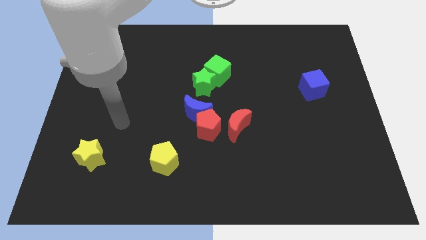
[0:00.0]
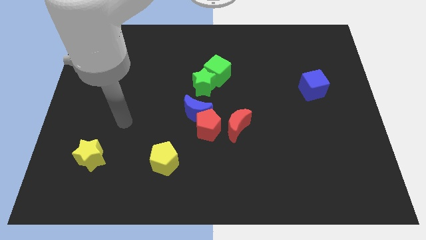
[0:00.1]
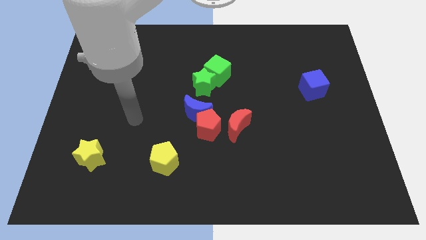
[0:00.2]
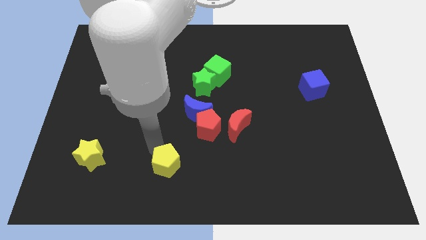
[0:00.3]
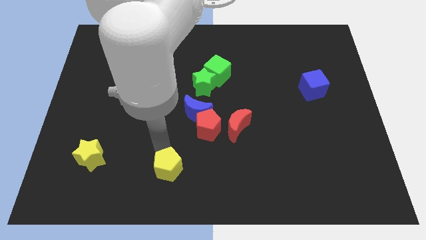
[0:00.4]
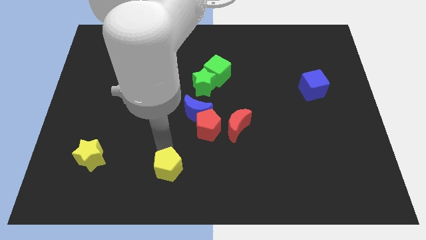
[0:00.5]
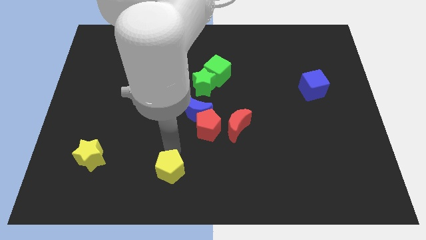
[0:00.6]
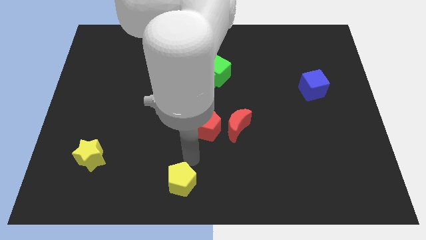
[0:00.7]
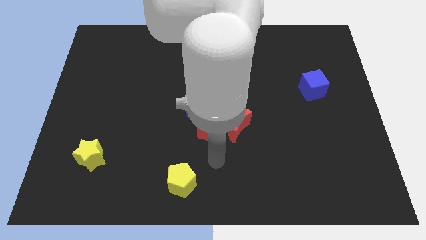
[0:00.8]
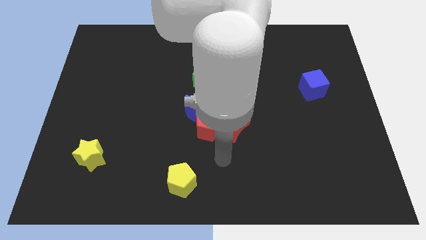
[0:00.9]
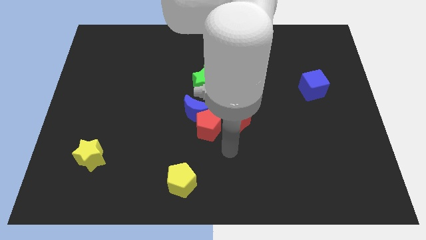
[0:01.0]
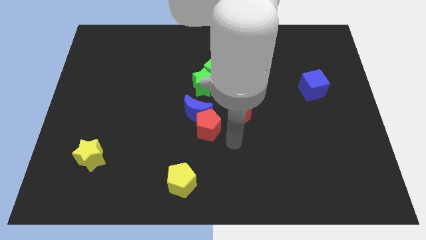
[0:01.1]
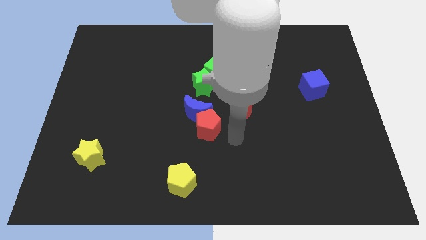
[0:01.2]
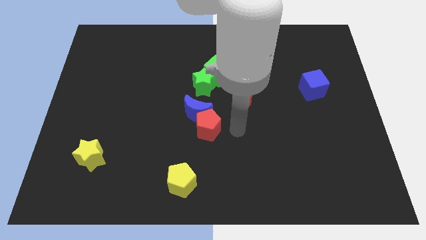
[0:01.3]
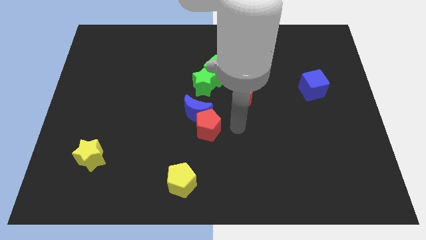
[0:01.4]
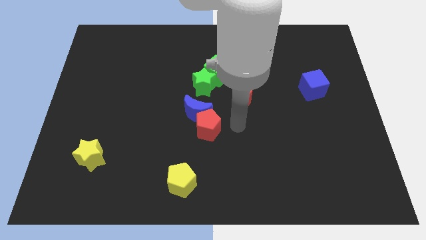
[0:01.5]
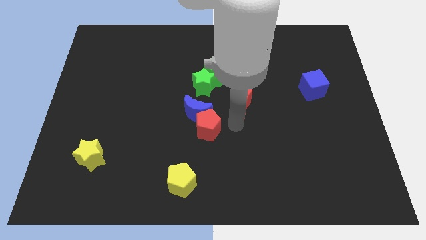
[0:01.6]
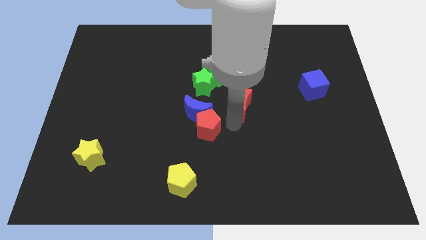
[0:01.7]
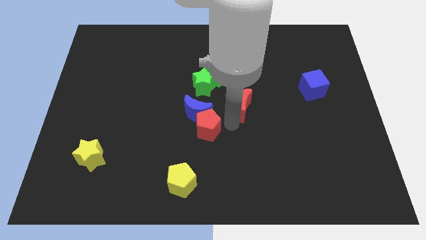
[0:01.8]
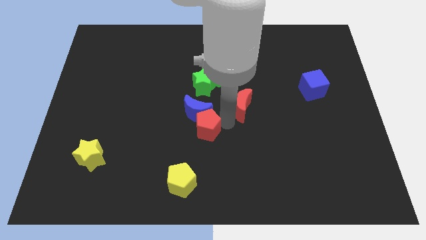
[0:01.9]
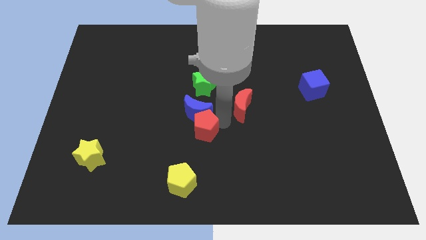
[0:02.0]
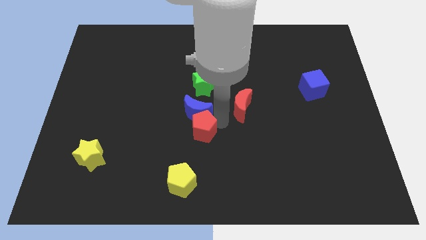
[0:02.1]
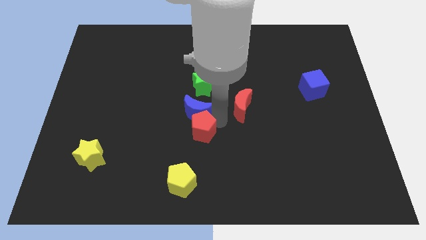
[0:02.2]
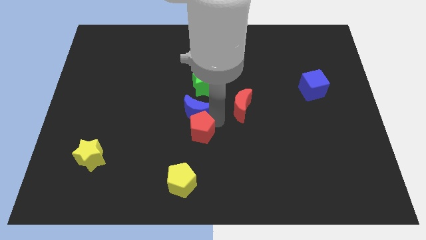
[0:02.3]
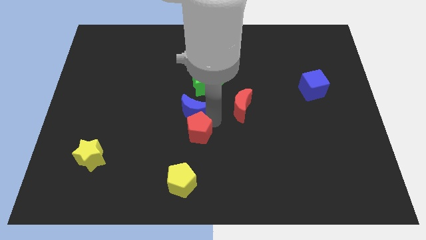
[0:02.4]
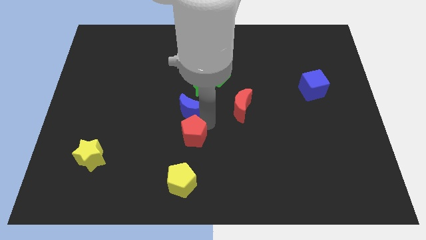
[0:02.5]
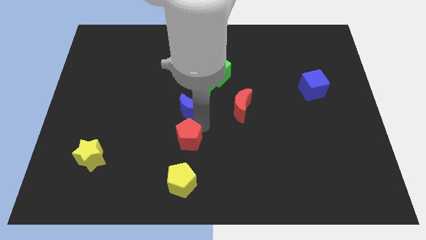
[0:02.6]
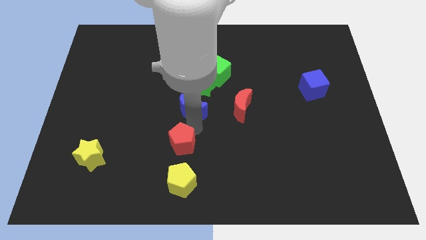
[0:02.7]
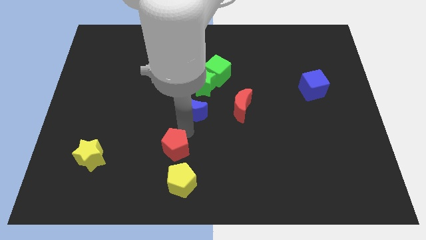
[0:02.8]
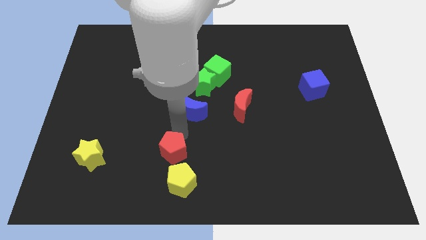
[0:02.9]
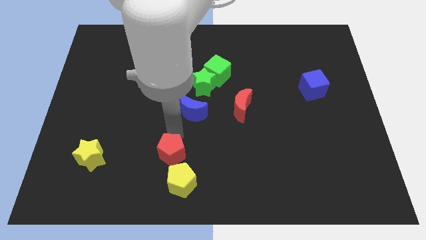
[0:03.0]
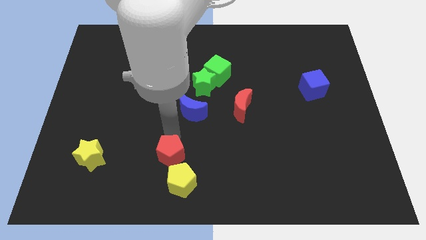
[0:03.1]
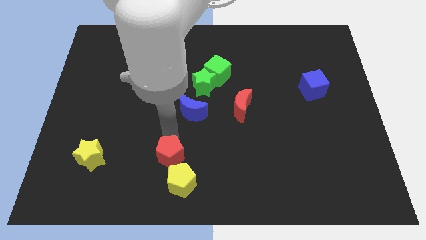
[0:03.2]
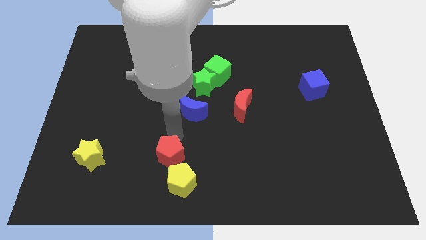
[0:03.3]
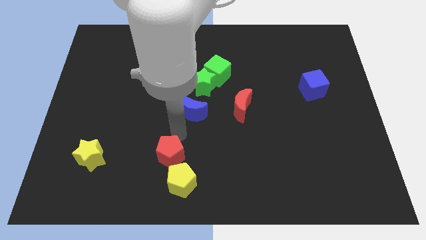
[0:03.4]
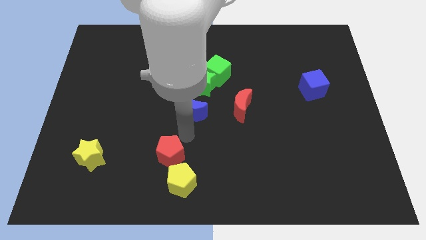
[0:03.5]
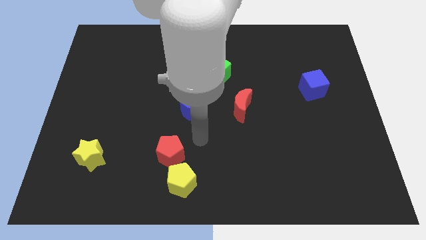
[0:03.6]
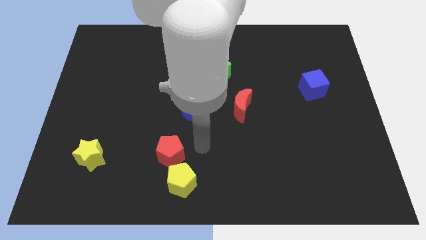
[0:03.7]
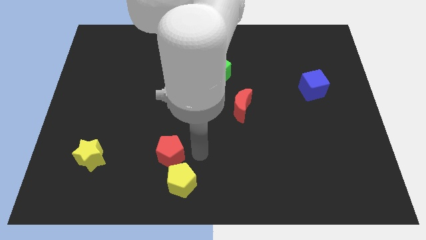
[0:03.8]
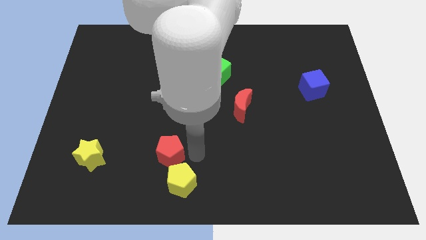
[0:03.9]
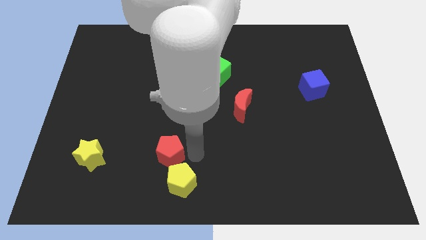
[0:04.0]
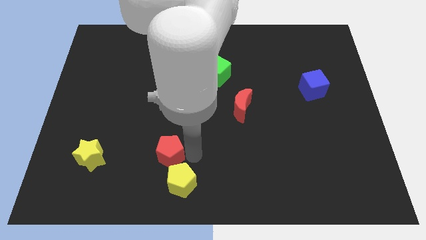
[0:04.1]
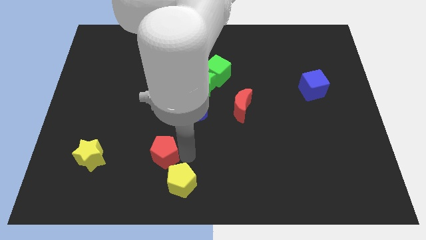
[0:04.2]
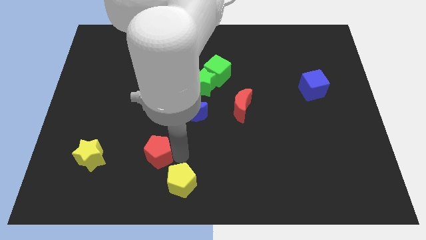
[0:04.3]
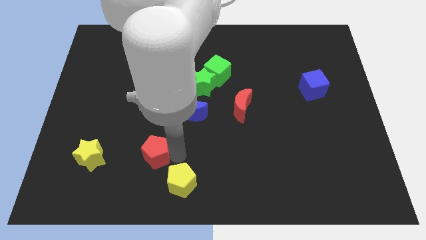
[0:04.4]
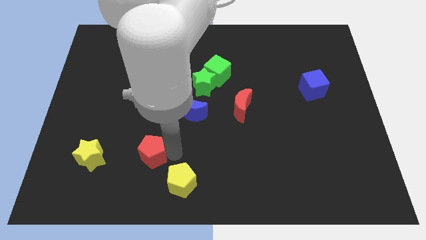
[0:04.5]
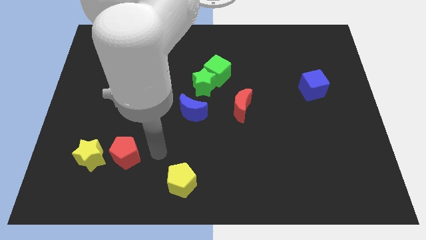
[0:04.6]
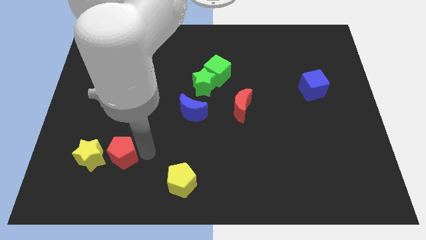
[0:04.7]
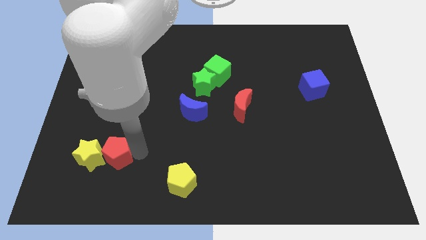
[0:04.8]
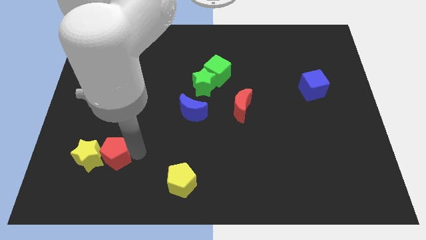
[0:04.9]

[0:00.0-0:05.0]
put the red pentagon next to the yellow star

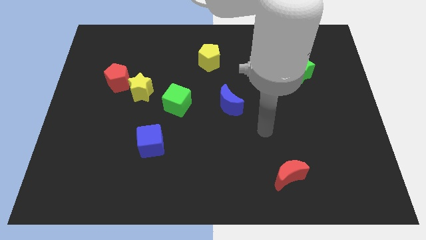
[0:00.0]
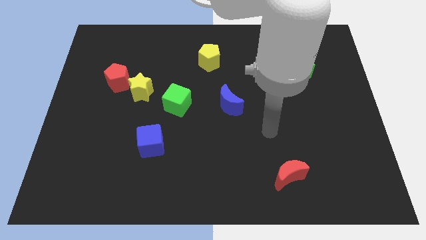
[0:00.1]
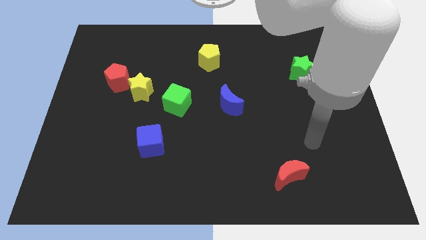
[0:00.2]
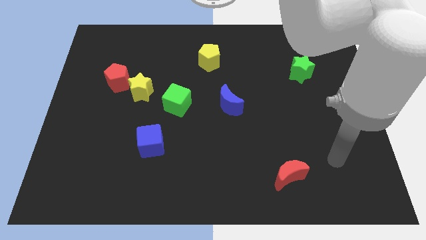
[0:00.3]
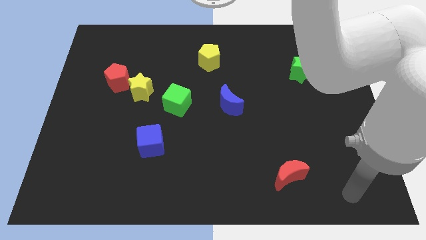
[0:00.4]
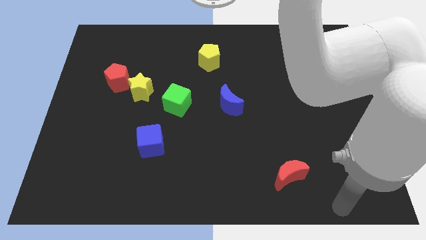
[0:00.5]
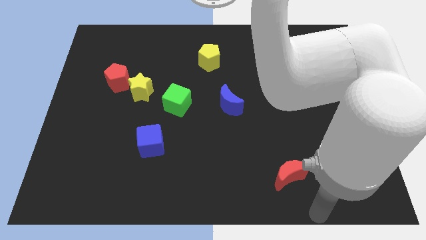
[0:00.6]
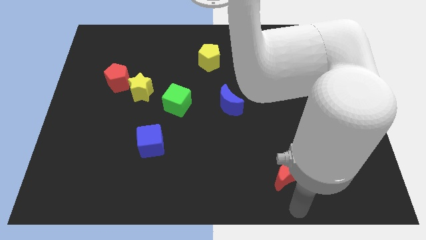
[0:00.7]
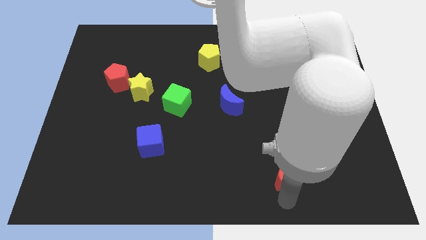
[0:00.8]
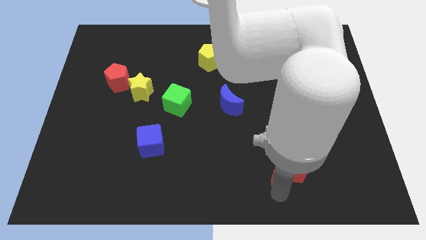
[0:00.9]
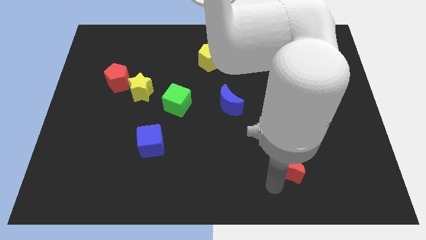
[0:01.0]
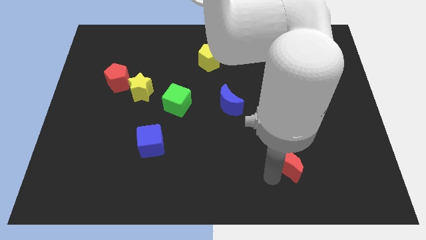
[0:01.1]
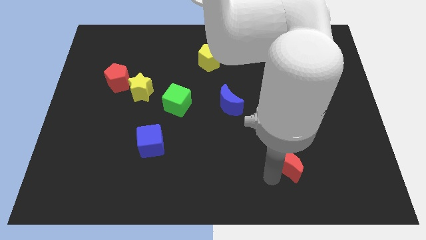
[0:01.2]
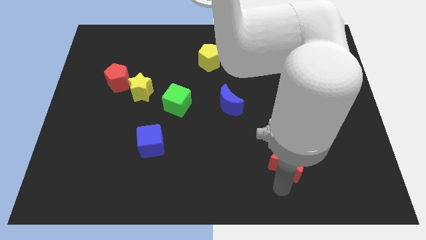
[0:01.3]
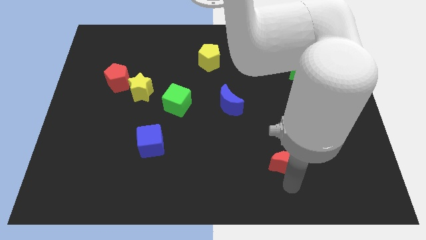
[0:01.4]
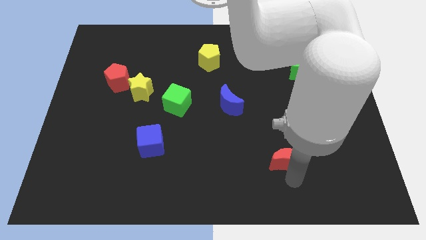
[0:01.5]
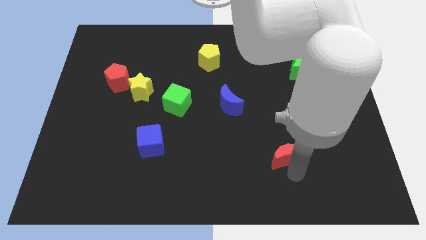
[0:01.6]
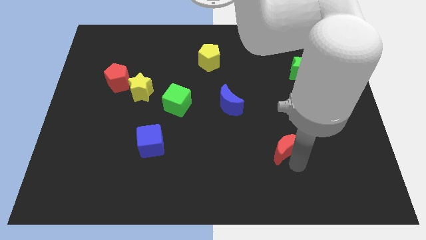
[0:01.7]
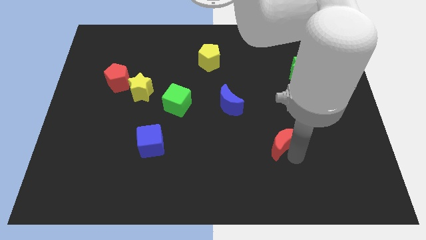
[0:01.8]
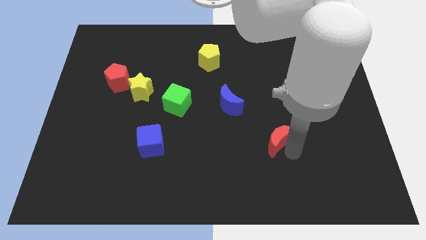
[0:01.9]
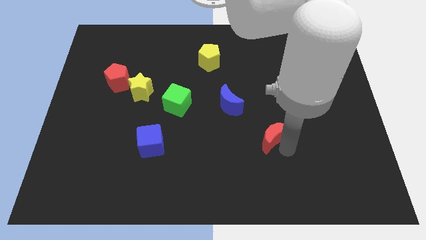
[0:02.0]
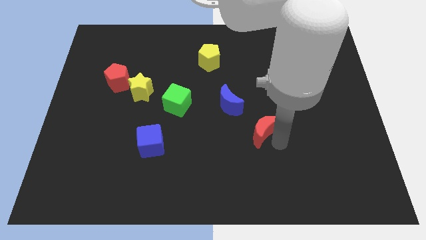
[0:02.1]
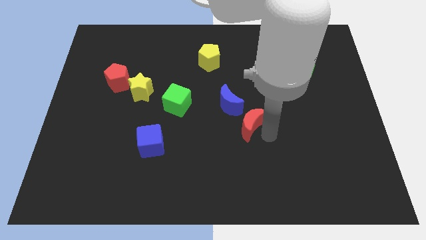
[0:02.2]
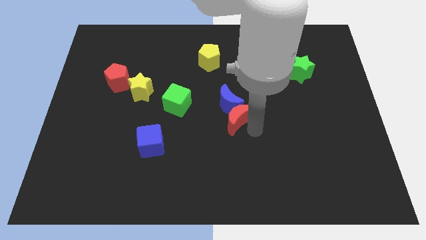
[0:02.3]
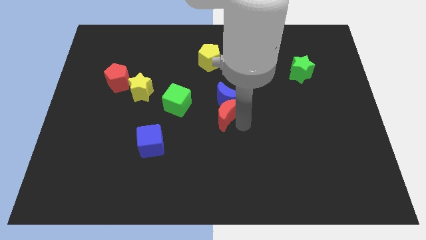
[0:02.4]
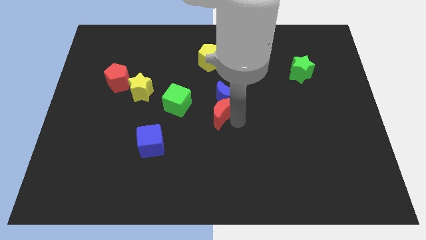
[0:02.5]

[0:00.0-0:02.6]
push the red moon close to the blue moon

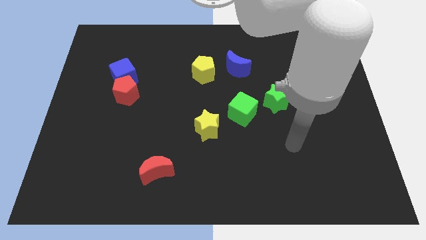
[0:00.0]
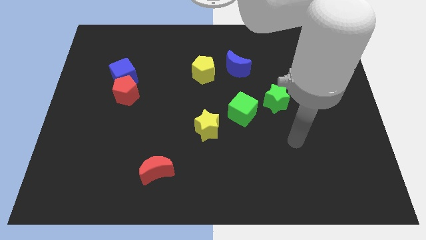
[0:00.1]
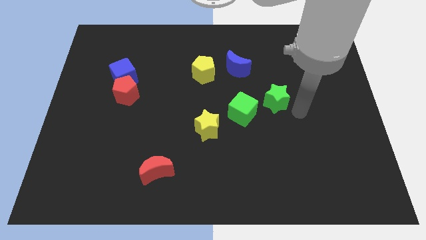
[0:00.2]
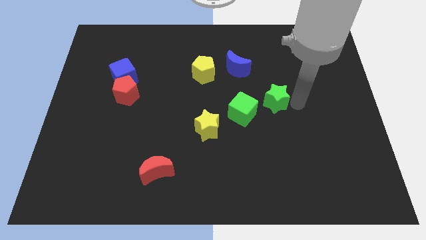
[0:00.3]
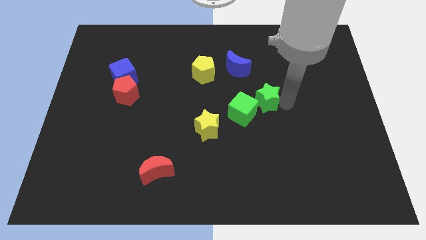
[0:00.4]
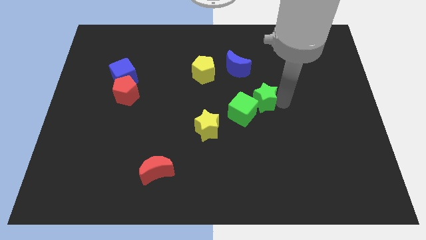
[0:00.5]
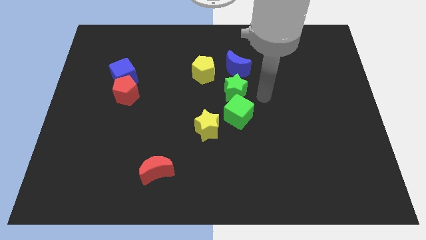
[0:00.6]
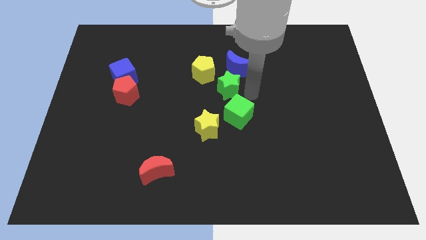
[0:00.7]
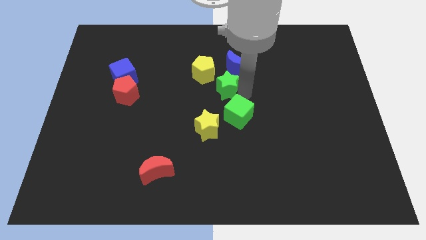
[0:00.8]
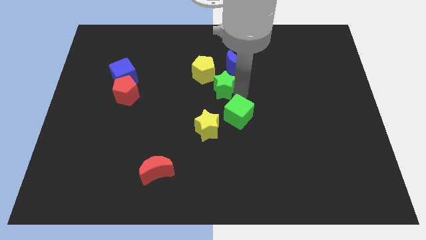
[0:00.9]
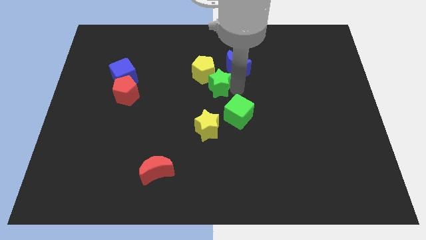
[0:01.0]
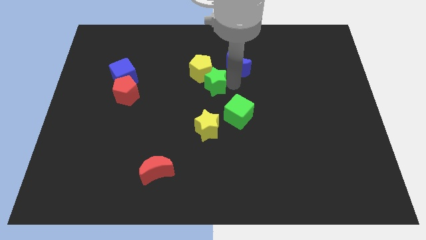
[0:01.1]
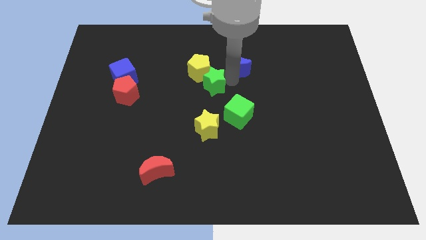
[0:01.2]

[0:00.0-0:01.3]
push the green star close to the yellow pentagon
